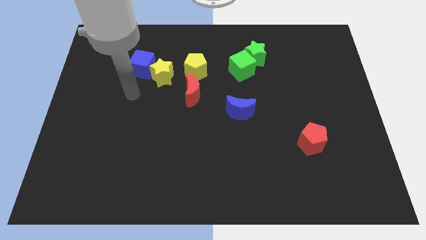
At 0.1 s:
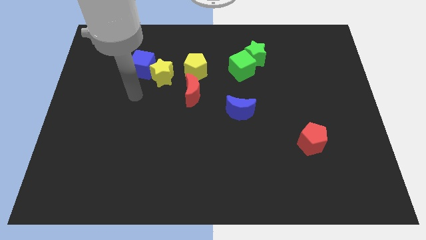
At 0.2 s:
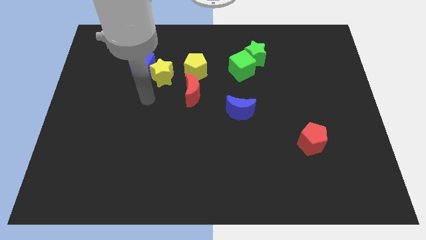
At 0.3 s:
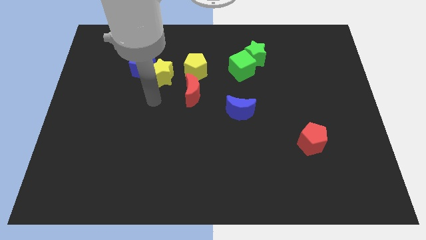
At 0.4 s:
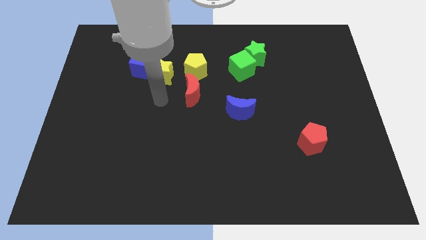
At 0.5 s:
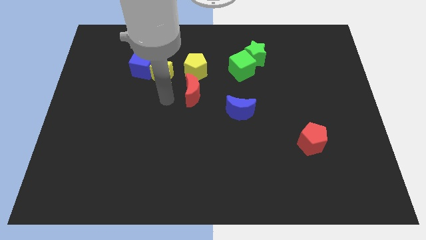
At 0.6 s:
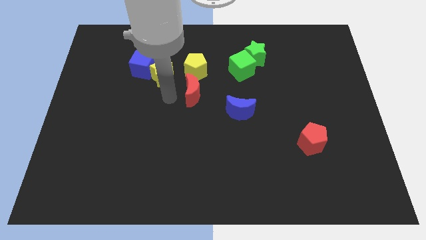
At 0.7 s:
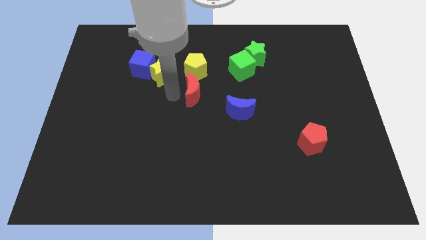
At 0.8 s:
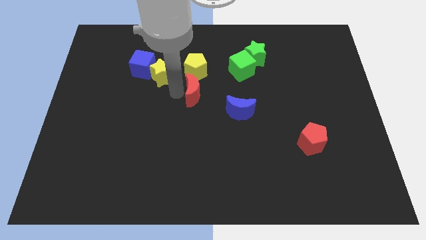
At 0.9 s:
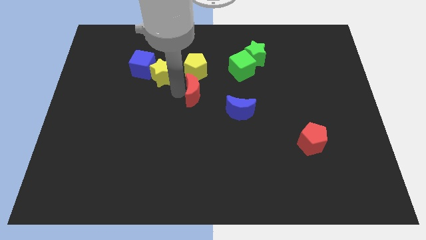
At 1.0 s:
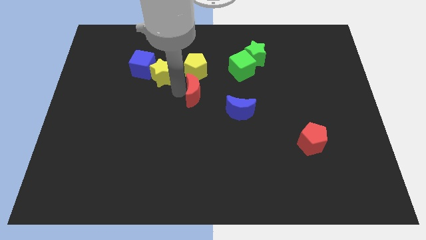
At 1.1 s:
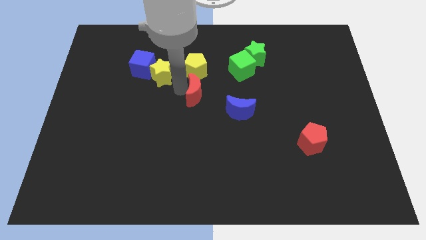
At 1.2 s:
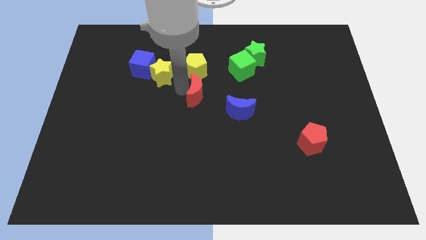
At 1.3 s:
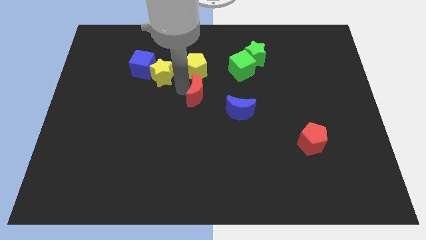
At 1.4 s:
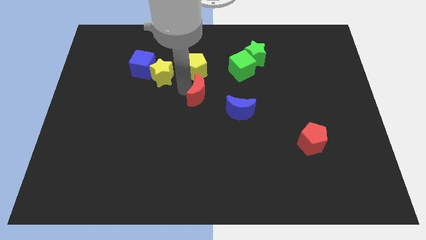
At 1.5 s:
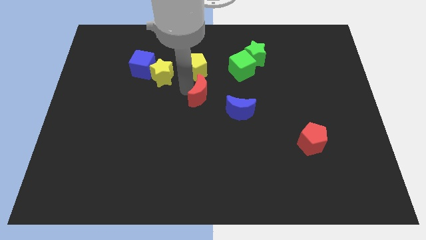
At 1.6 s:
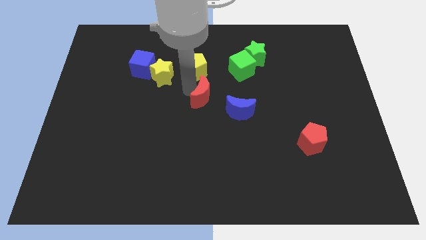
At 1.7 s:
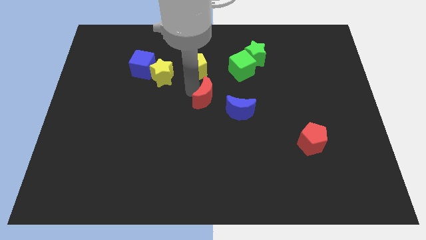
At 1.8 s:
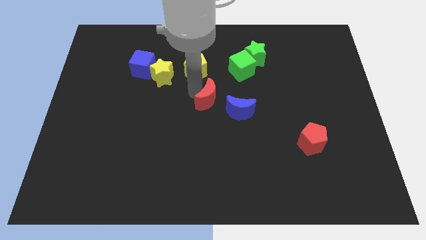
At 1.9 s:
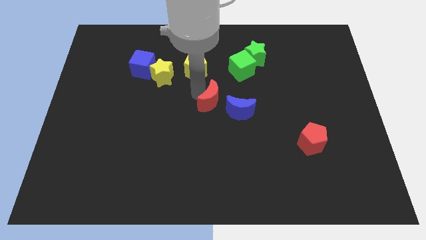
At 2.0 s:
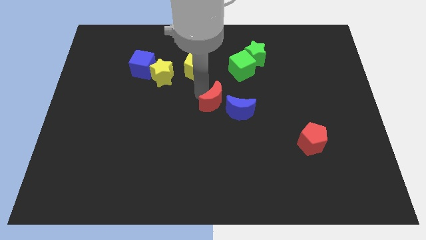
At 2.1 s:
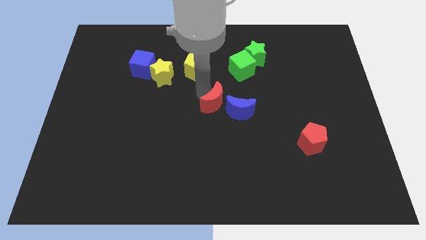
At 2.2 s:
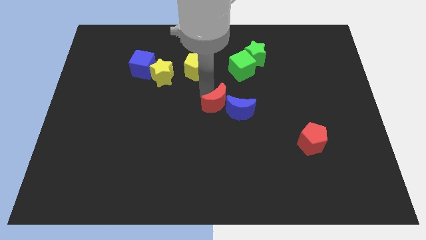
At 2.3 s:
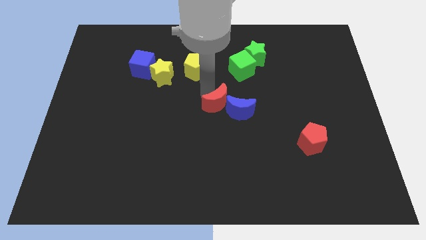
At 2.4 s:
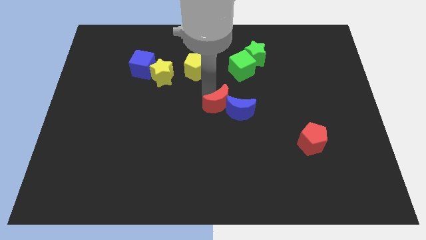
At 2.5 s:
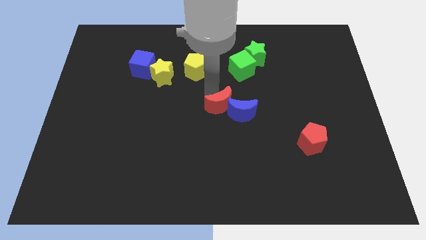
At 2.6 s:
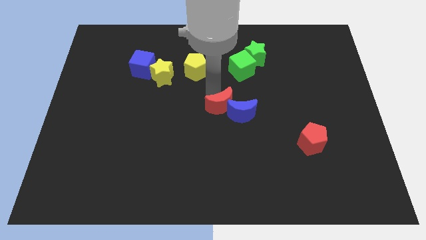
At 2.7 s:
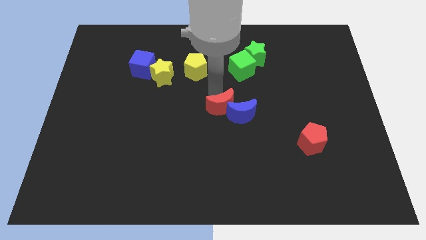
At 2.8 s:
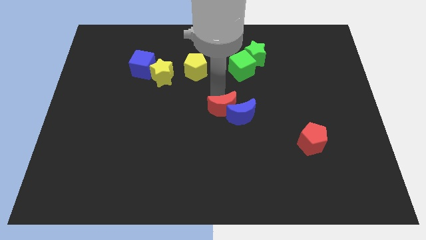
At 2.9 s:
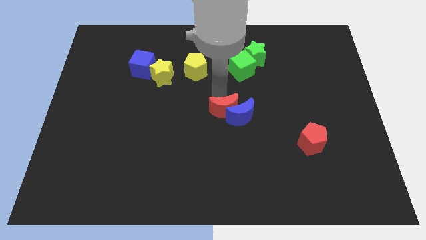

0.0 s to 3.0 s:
push the red crescent into the blue crescent

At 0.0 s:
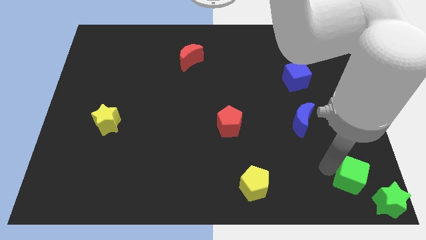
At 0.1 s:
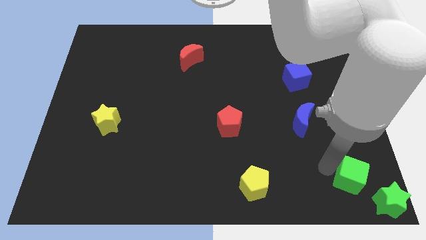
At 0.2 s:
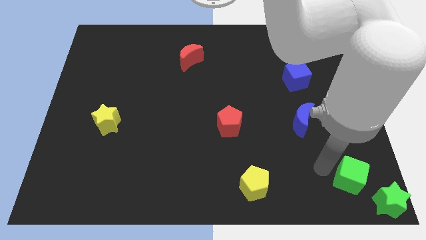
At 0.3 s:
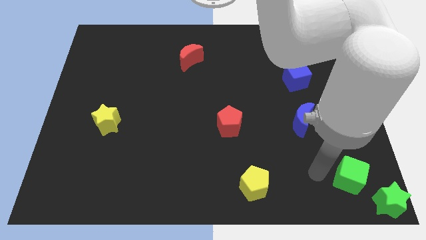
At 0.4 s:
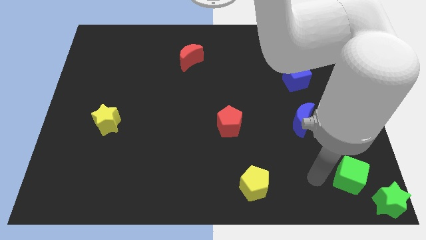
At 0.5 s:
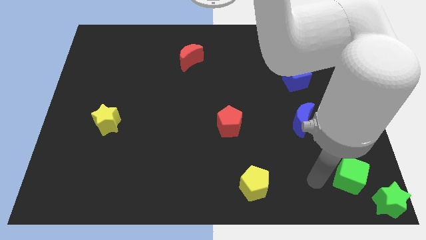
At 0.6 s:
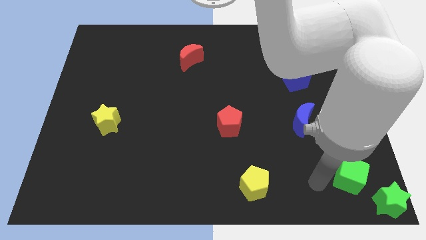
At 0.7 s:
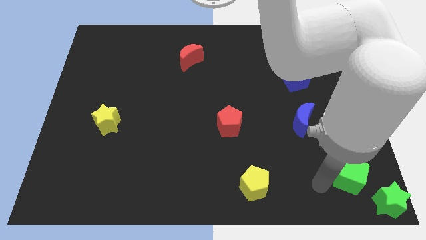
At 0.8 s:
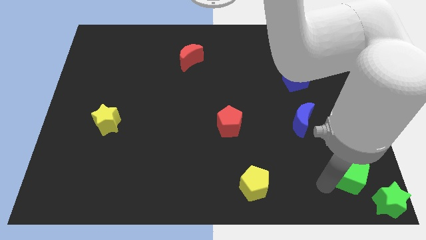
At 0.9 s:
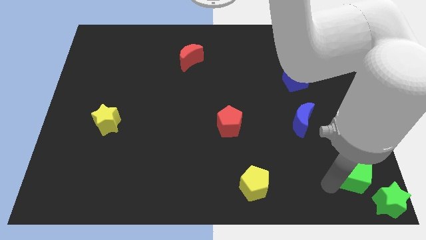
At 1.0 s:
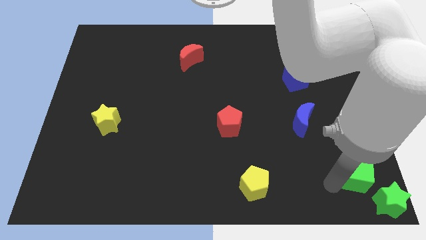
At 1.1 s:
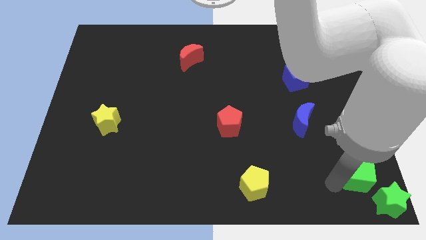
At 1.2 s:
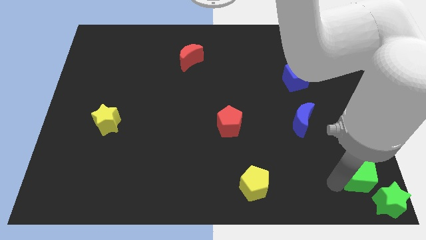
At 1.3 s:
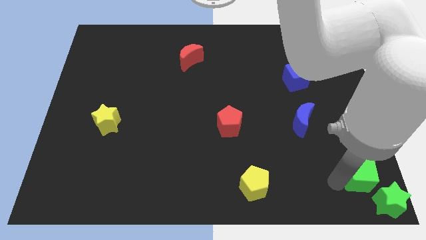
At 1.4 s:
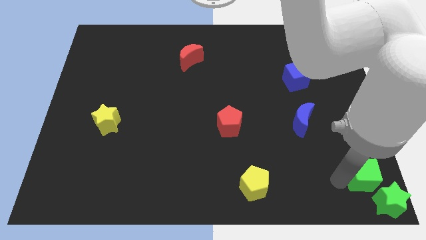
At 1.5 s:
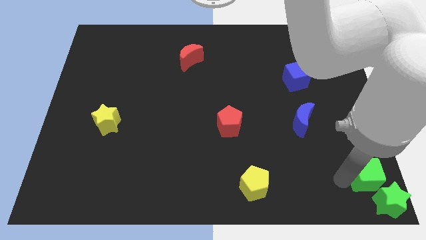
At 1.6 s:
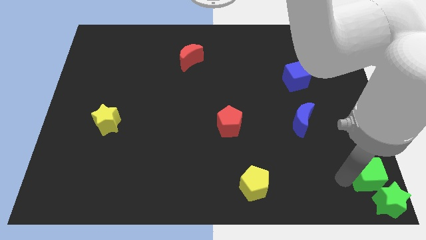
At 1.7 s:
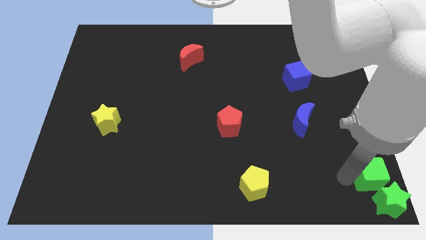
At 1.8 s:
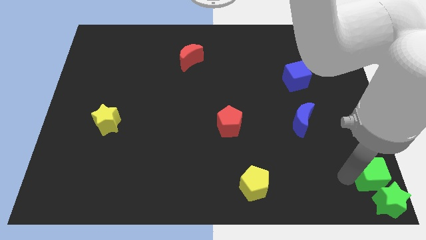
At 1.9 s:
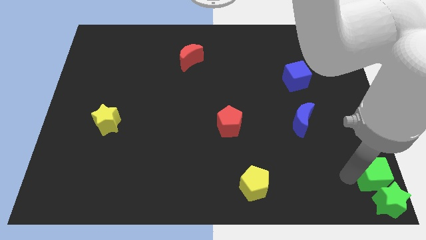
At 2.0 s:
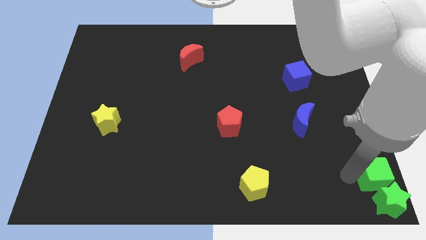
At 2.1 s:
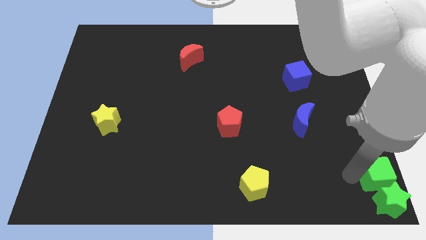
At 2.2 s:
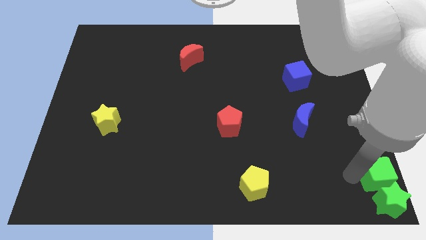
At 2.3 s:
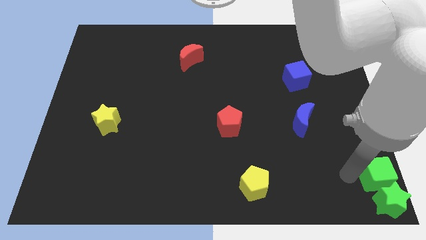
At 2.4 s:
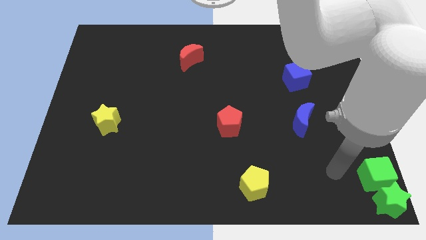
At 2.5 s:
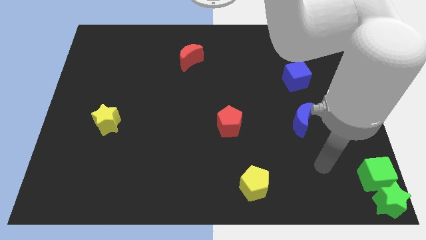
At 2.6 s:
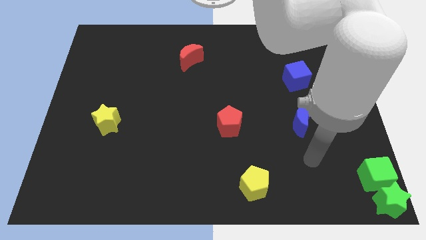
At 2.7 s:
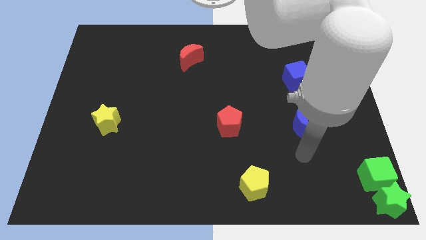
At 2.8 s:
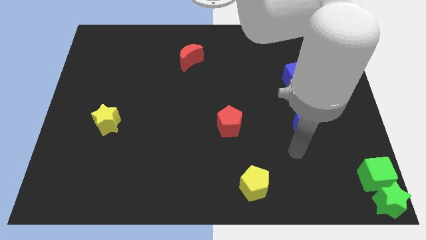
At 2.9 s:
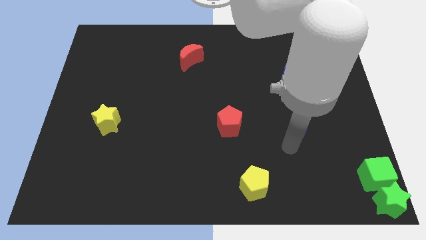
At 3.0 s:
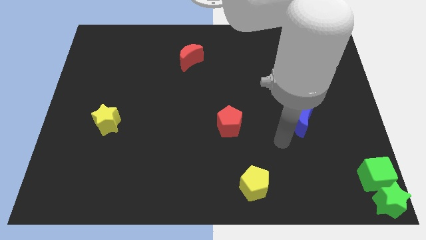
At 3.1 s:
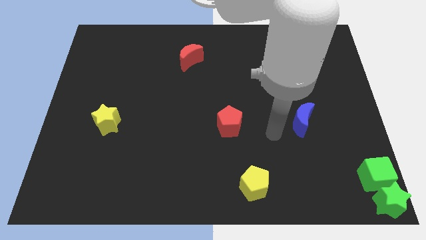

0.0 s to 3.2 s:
move the green cube on top of the green star

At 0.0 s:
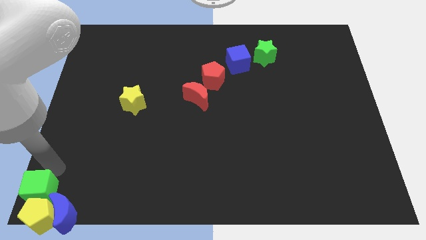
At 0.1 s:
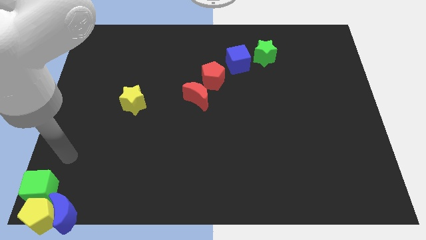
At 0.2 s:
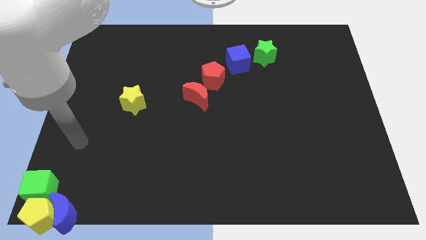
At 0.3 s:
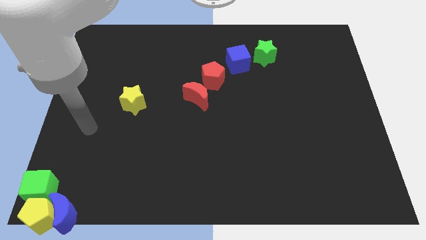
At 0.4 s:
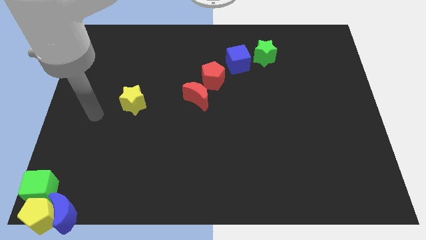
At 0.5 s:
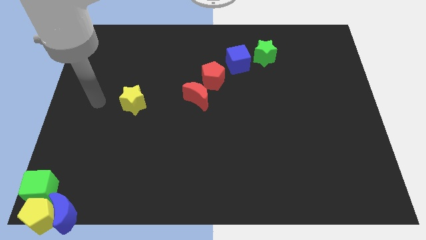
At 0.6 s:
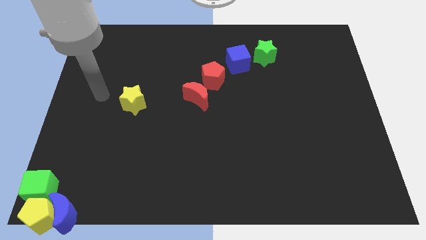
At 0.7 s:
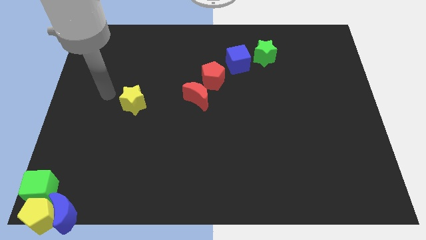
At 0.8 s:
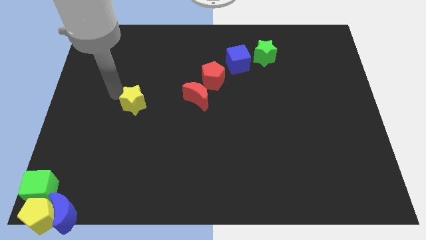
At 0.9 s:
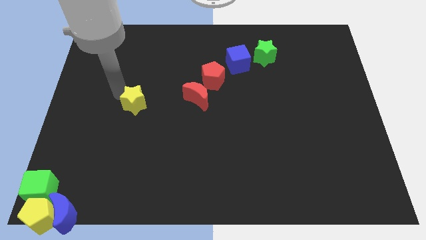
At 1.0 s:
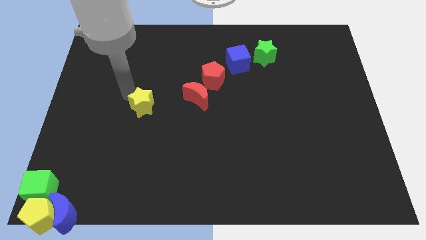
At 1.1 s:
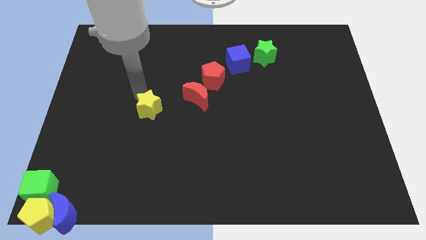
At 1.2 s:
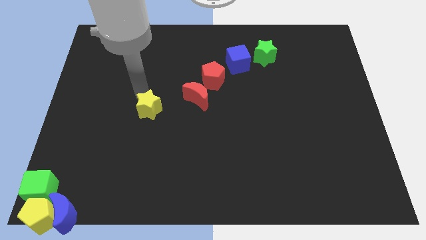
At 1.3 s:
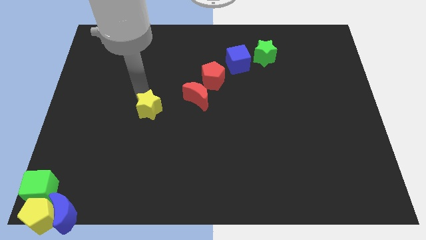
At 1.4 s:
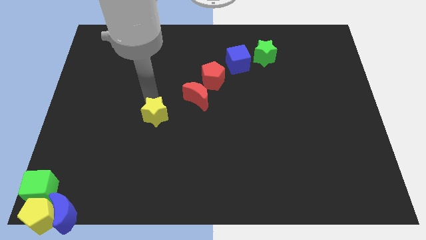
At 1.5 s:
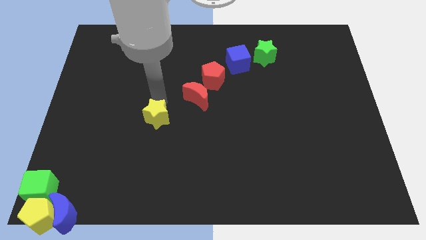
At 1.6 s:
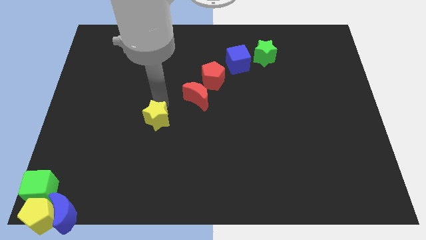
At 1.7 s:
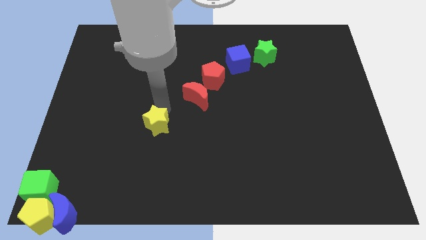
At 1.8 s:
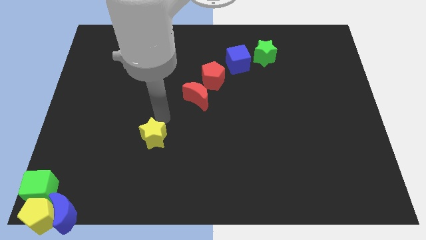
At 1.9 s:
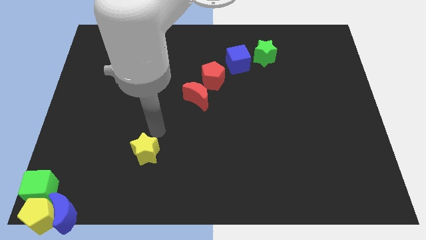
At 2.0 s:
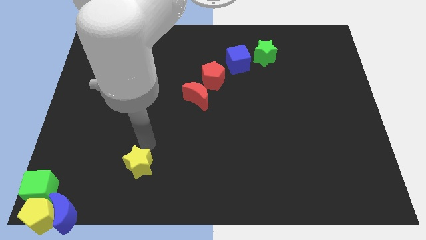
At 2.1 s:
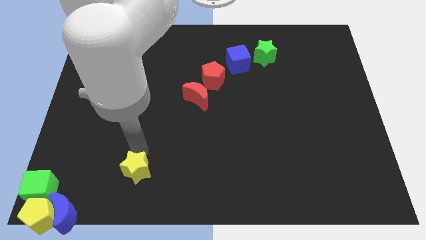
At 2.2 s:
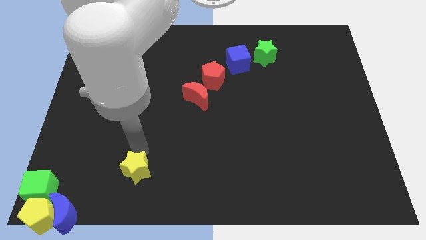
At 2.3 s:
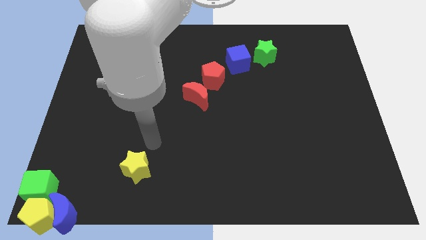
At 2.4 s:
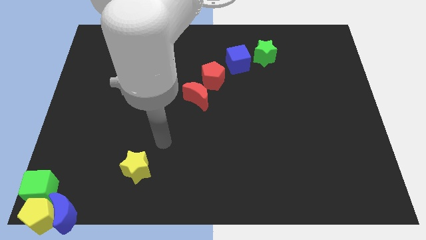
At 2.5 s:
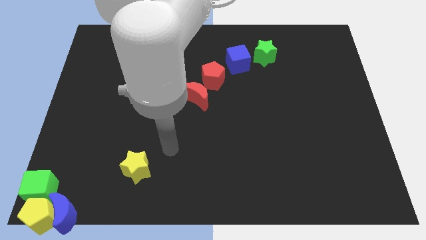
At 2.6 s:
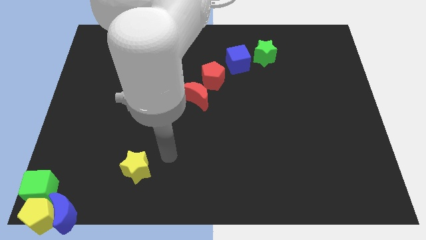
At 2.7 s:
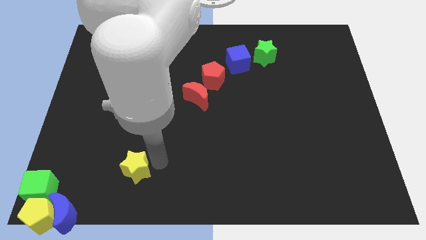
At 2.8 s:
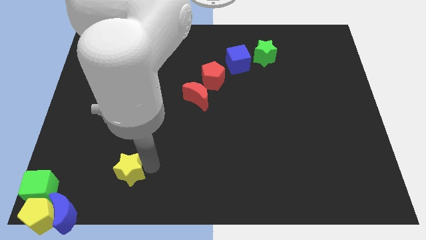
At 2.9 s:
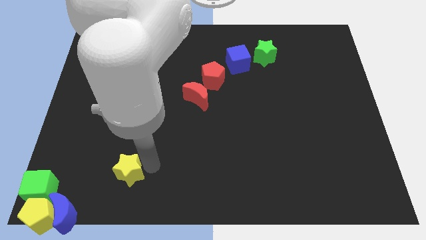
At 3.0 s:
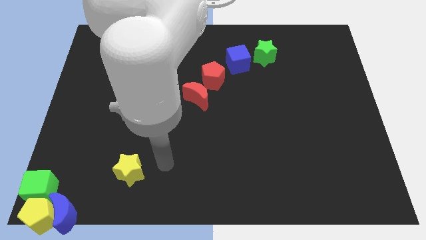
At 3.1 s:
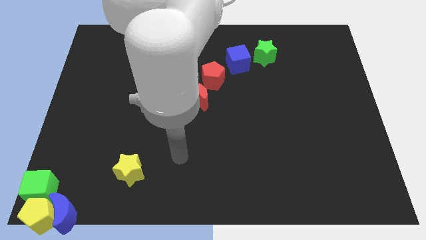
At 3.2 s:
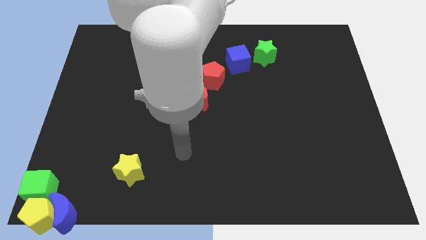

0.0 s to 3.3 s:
move the yellow star towards the right side of the green cube
